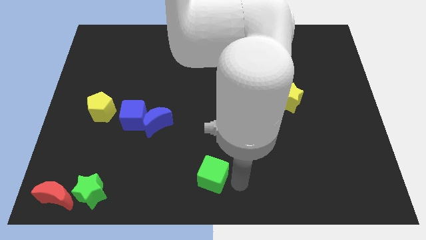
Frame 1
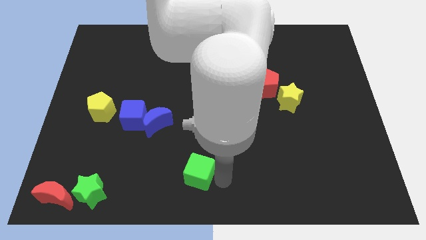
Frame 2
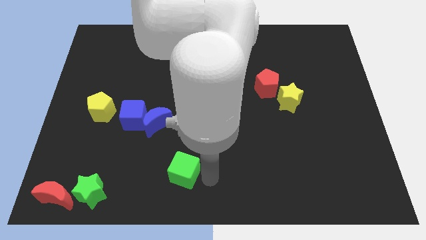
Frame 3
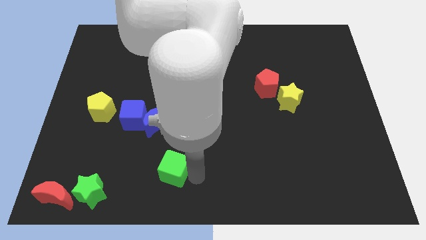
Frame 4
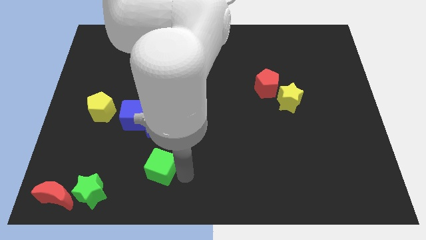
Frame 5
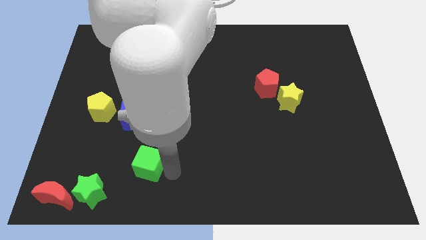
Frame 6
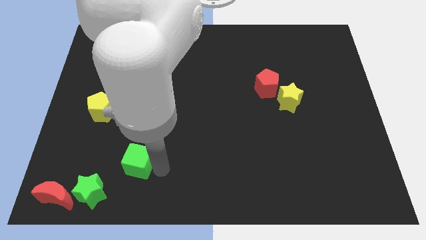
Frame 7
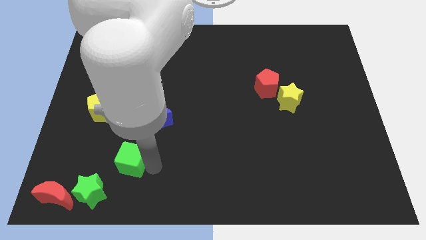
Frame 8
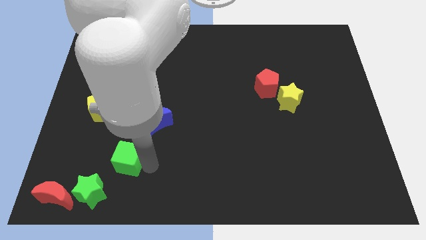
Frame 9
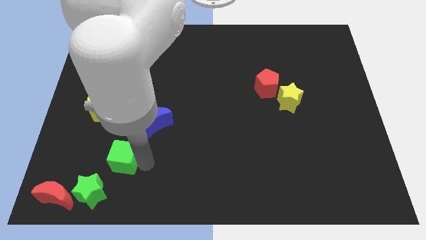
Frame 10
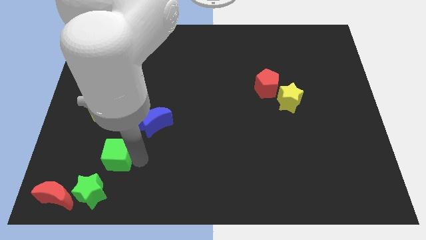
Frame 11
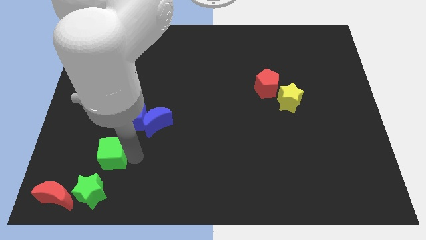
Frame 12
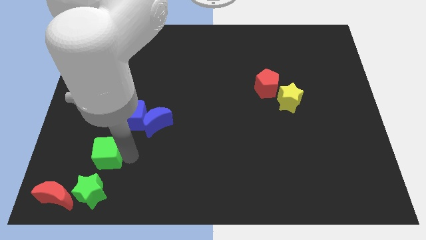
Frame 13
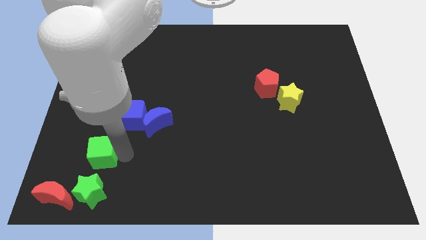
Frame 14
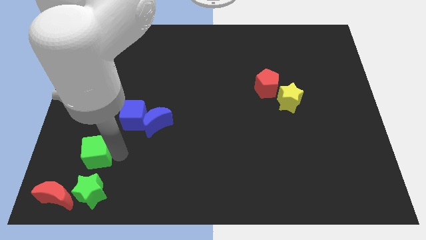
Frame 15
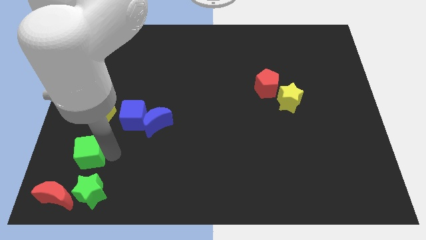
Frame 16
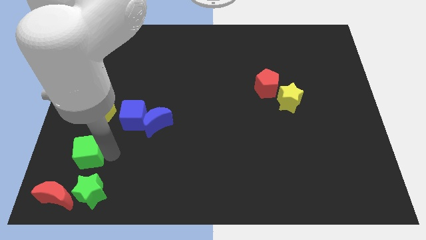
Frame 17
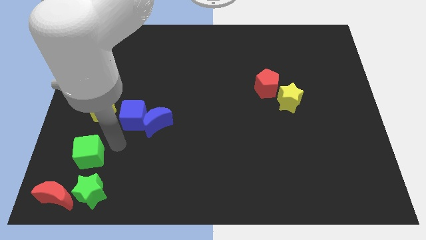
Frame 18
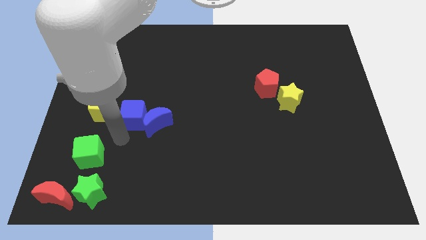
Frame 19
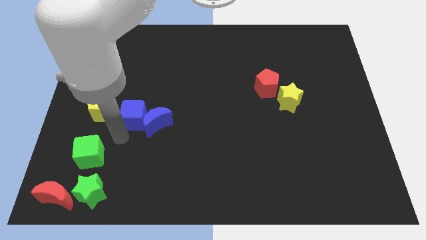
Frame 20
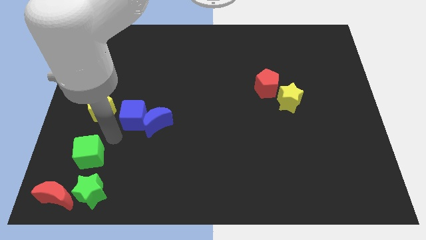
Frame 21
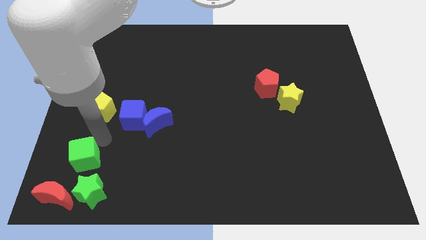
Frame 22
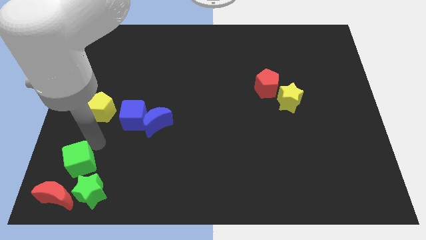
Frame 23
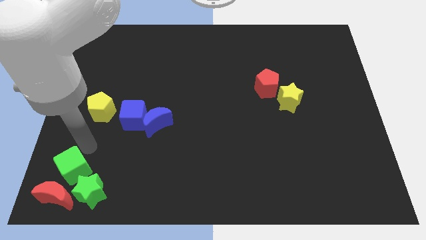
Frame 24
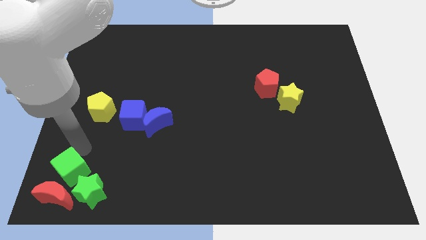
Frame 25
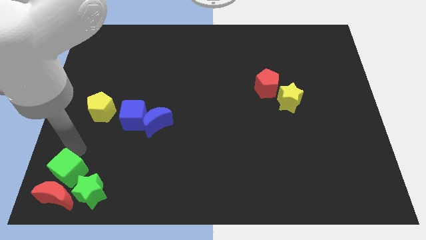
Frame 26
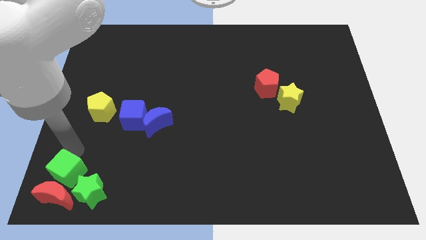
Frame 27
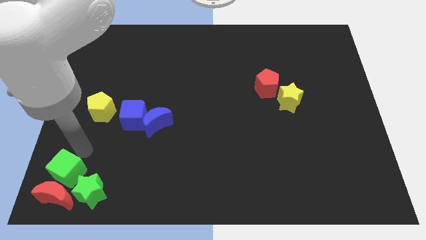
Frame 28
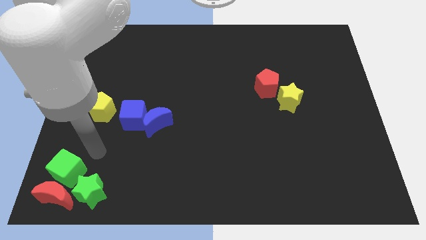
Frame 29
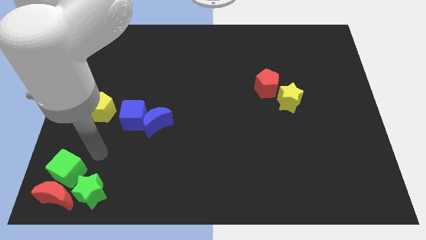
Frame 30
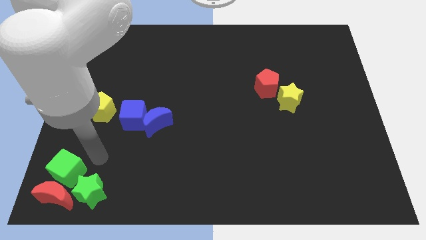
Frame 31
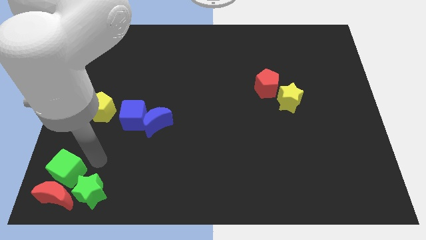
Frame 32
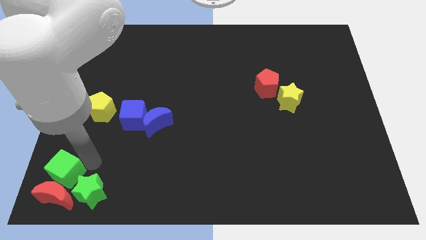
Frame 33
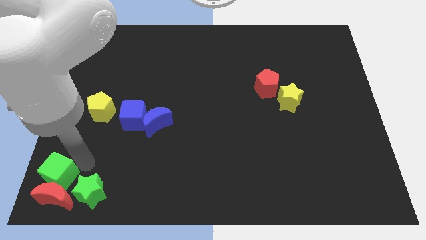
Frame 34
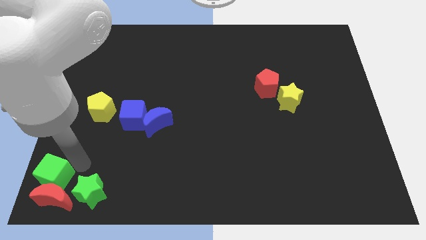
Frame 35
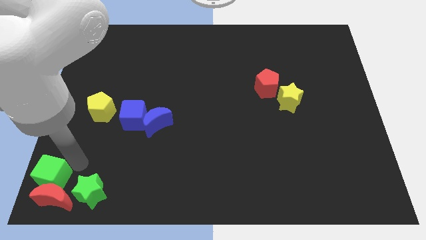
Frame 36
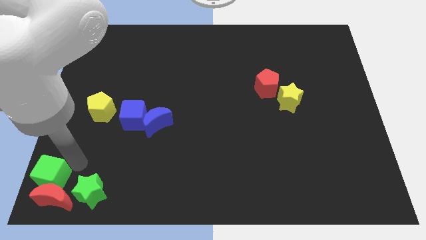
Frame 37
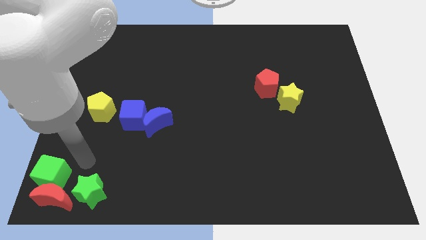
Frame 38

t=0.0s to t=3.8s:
slide the green cube into the red crescent

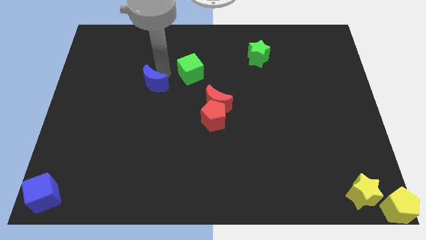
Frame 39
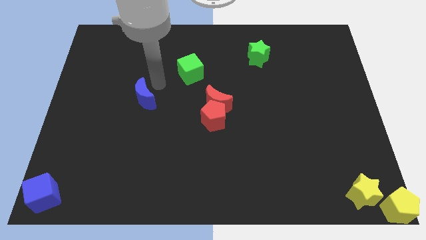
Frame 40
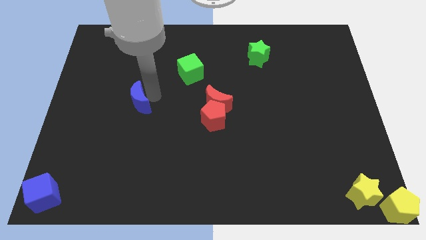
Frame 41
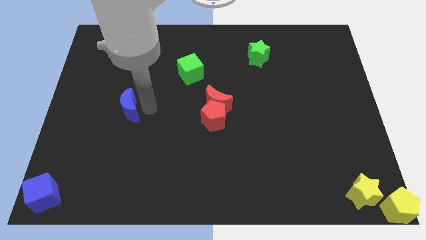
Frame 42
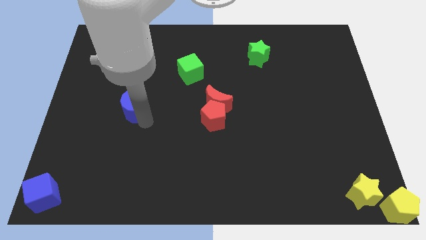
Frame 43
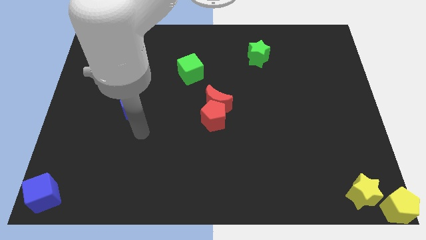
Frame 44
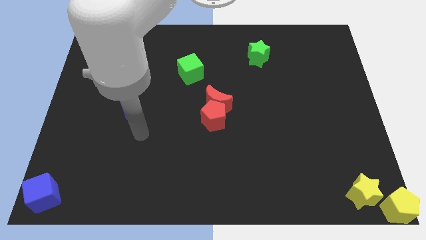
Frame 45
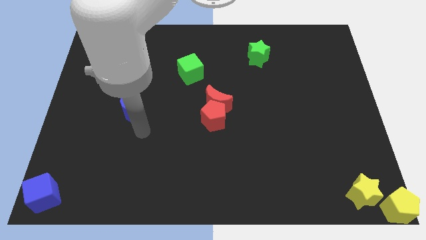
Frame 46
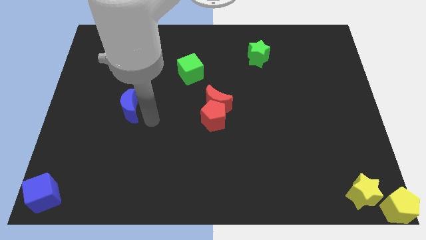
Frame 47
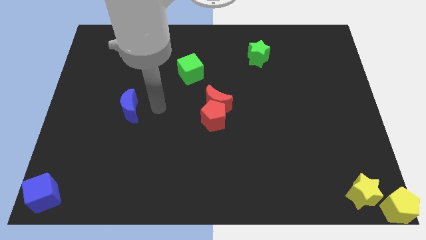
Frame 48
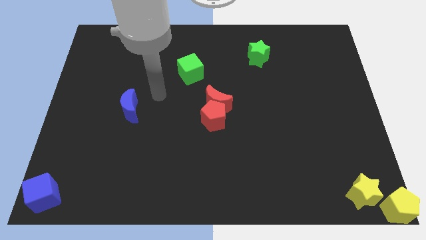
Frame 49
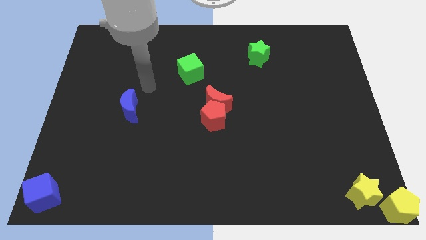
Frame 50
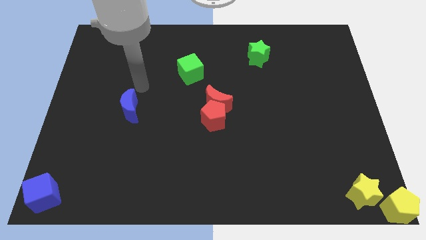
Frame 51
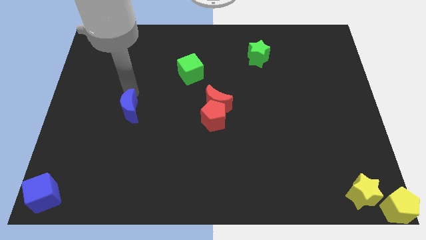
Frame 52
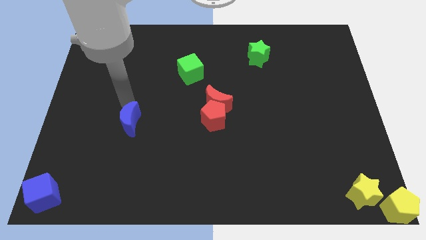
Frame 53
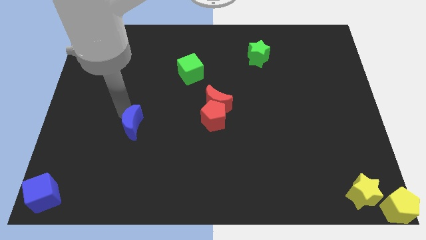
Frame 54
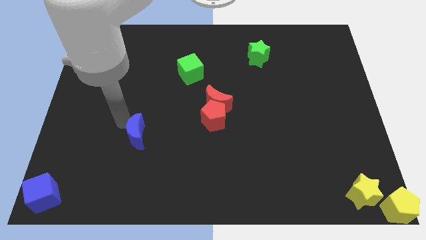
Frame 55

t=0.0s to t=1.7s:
push the blue crescent to the downwards of the board

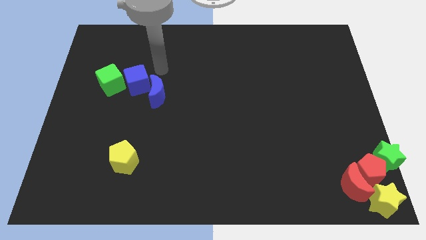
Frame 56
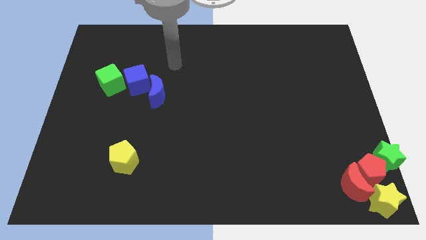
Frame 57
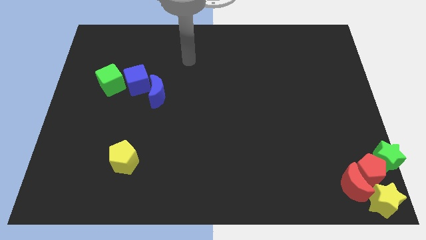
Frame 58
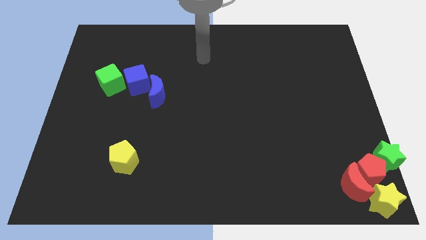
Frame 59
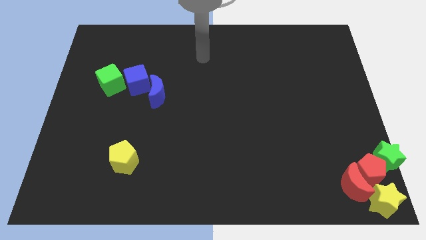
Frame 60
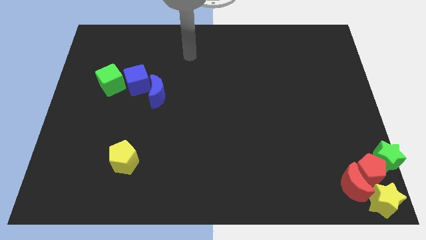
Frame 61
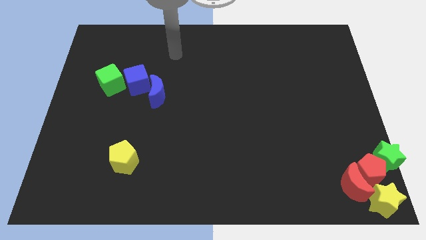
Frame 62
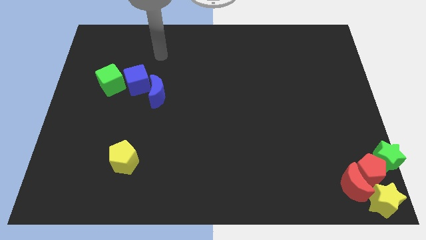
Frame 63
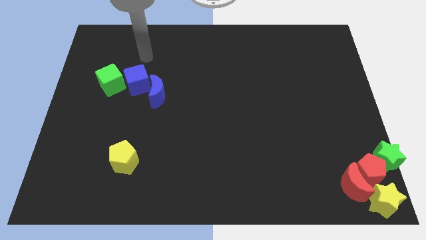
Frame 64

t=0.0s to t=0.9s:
move the arm towards the top side of the blue cube

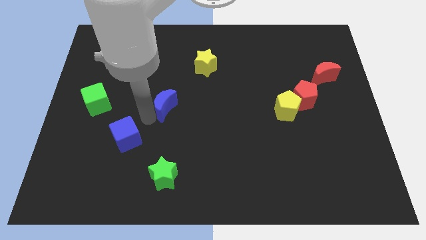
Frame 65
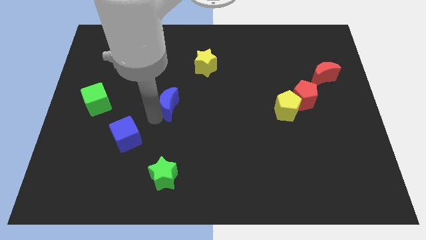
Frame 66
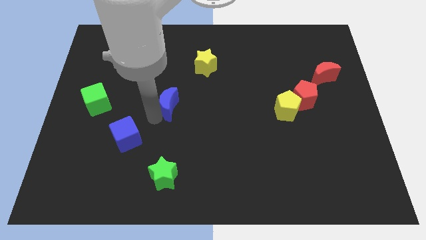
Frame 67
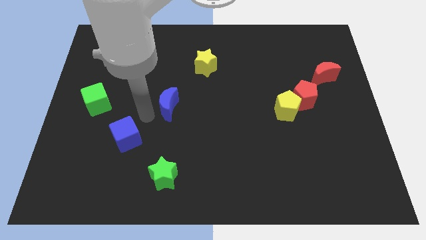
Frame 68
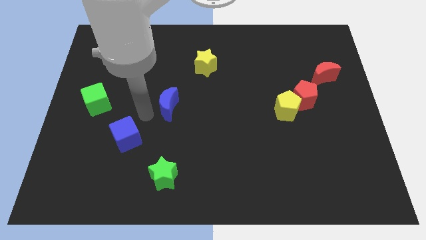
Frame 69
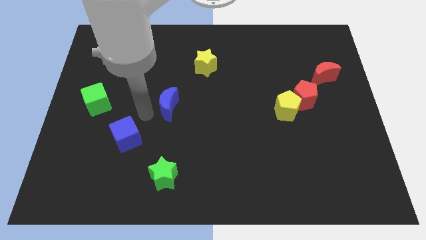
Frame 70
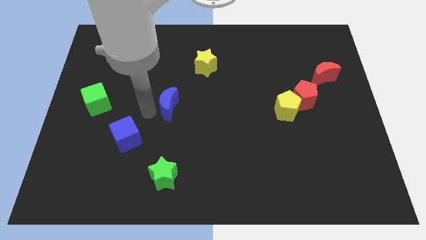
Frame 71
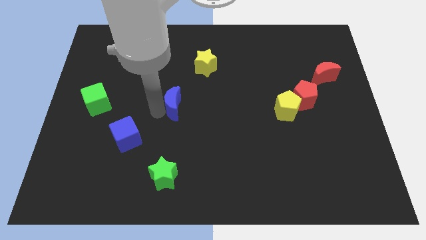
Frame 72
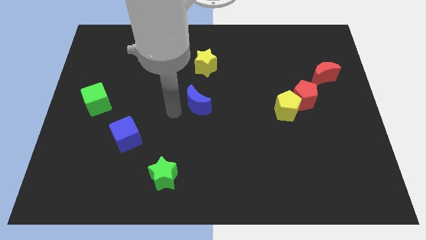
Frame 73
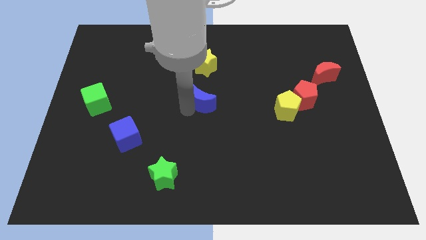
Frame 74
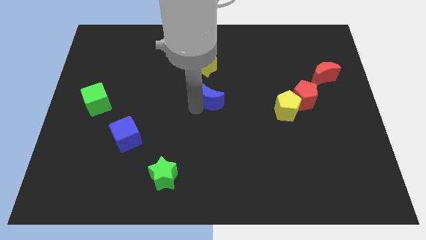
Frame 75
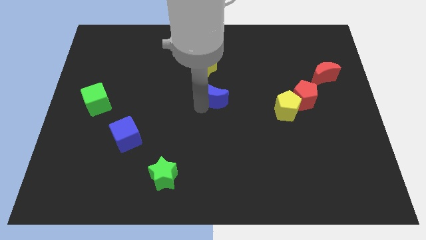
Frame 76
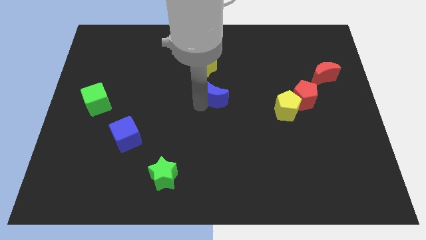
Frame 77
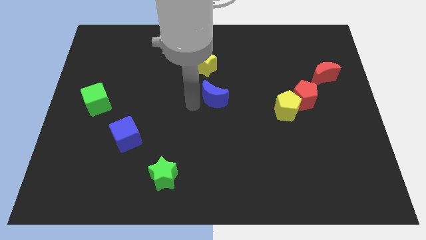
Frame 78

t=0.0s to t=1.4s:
place blue moon to the bottom of yellow star

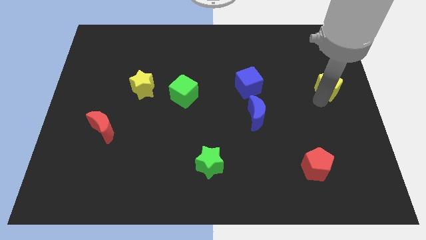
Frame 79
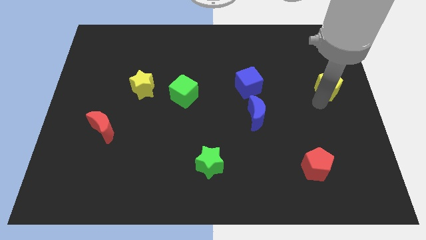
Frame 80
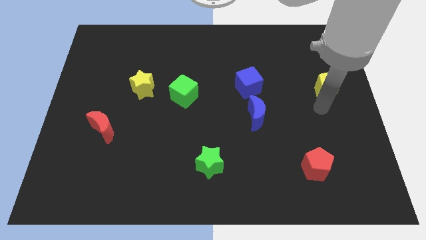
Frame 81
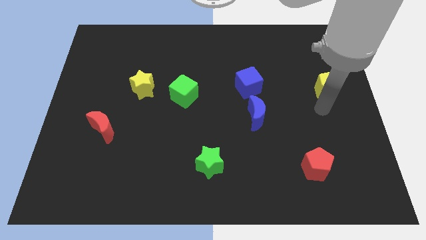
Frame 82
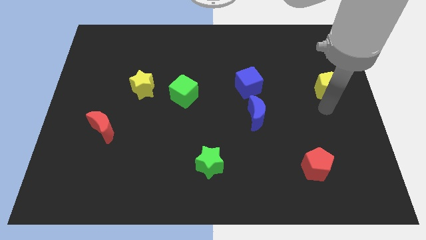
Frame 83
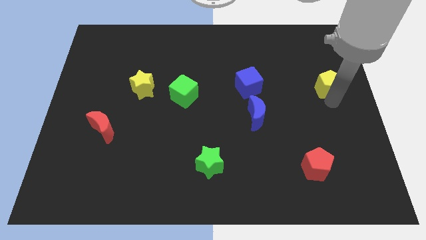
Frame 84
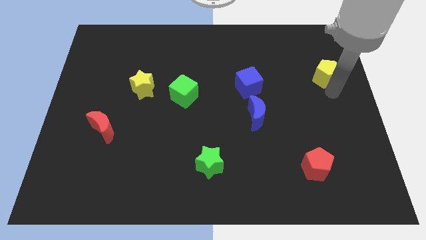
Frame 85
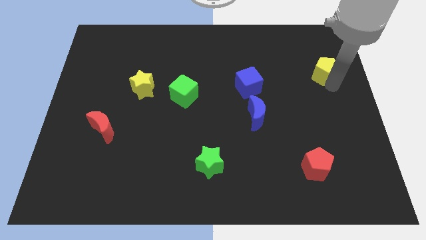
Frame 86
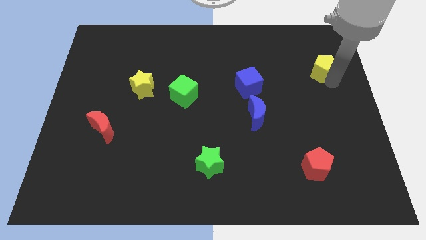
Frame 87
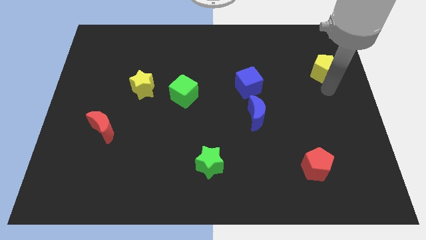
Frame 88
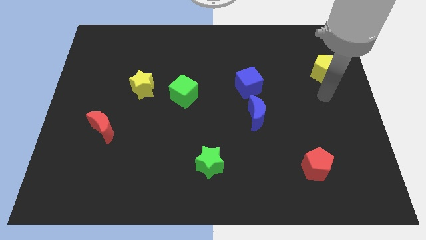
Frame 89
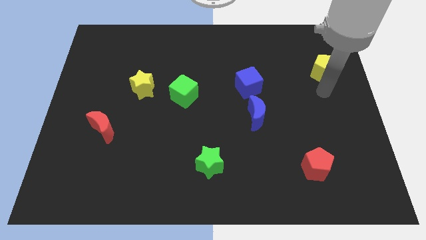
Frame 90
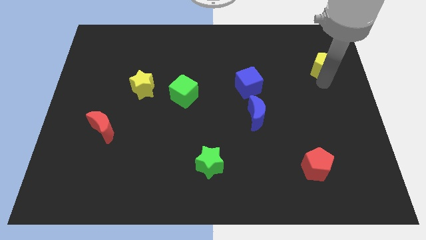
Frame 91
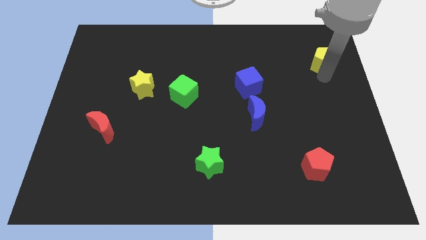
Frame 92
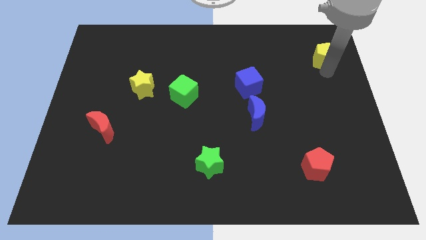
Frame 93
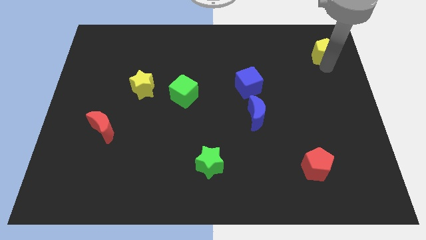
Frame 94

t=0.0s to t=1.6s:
push the yellow pentagon upwards
